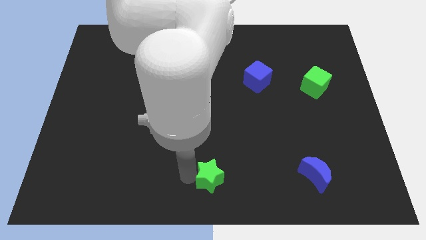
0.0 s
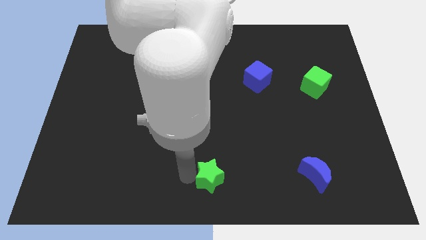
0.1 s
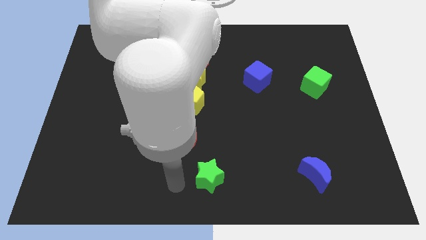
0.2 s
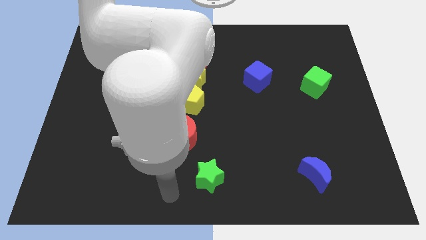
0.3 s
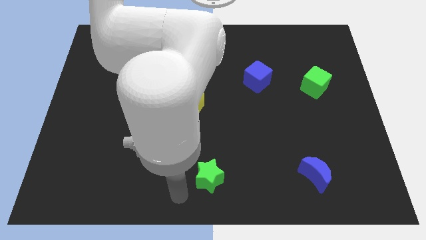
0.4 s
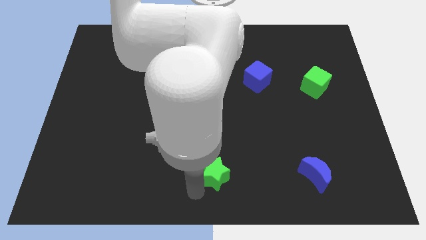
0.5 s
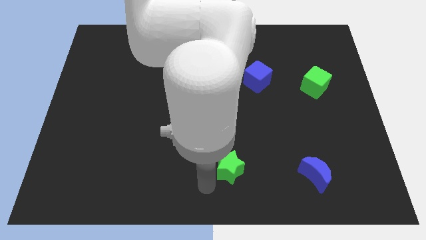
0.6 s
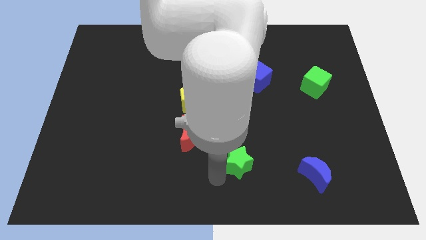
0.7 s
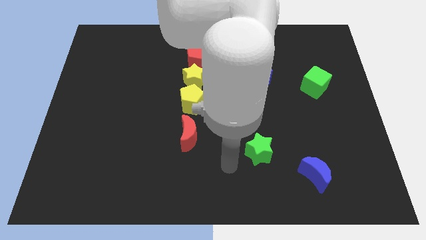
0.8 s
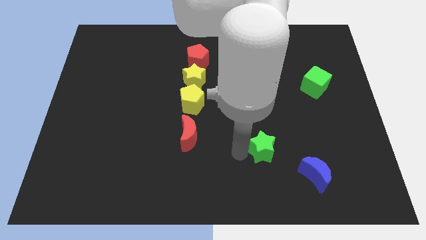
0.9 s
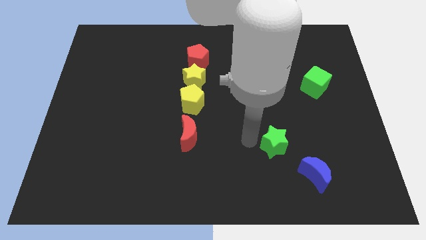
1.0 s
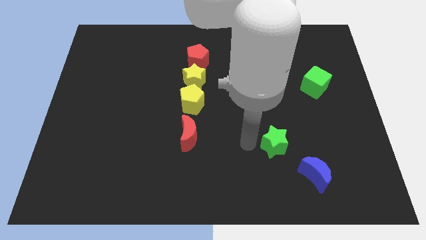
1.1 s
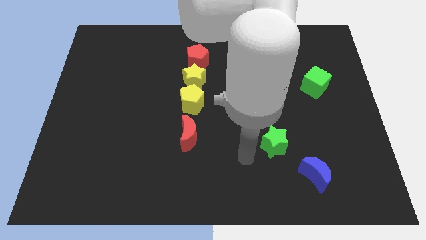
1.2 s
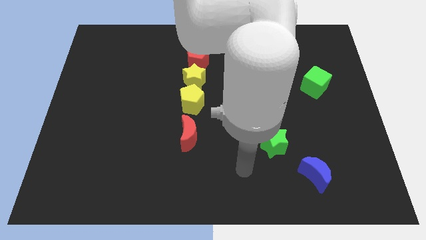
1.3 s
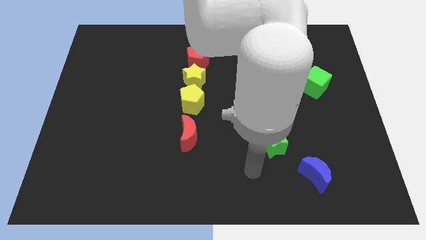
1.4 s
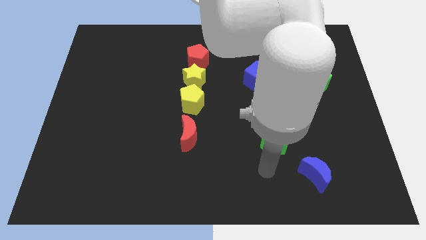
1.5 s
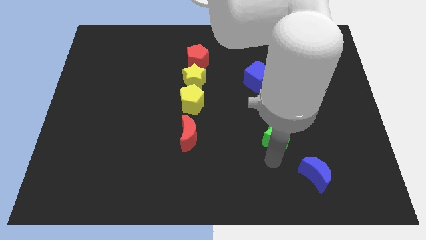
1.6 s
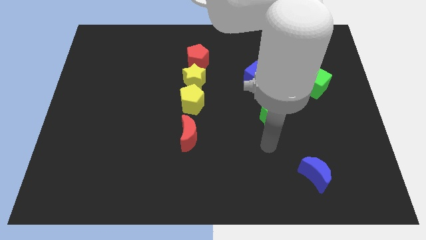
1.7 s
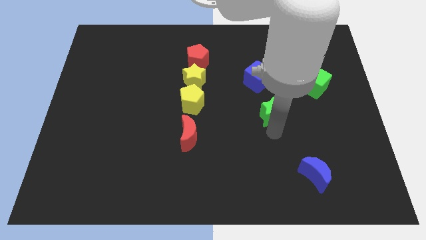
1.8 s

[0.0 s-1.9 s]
place the green star below the blue cube

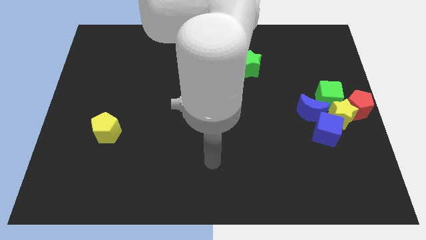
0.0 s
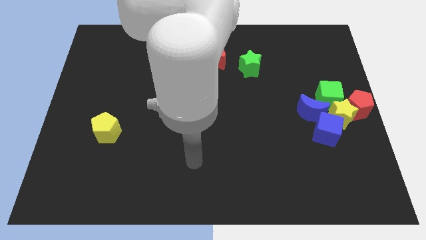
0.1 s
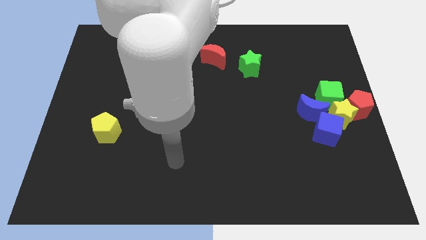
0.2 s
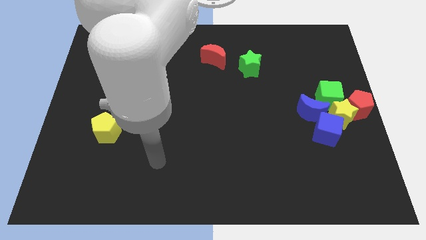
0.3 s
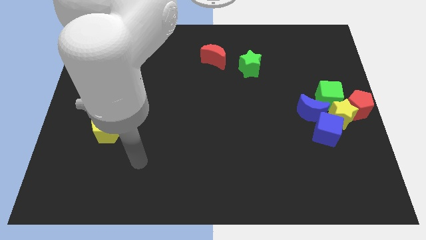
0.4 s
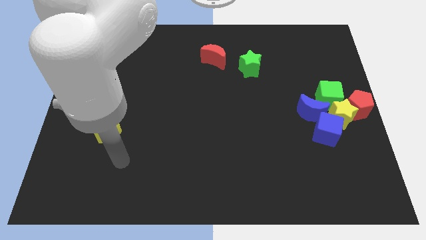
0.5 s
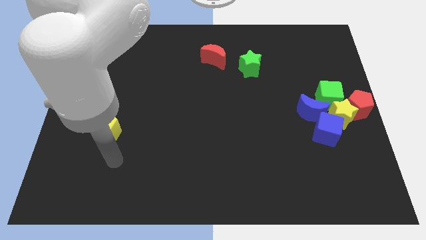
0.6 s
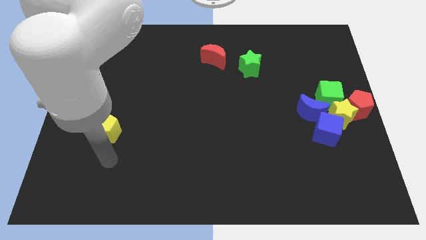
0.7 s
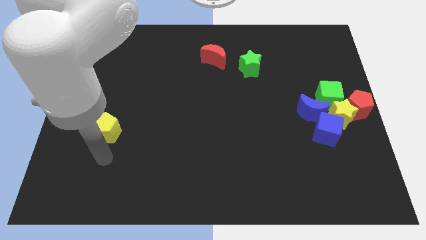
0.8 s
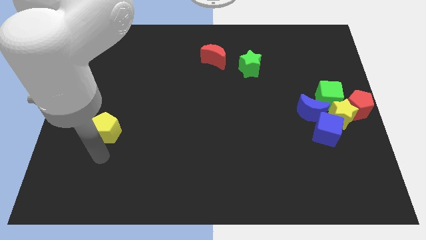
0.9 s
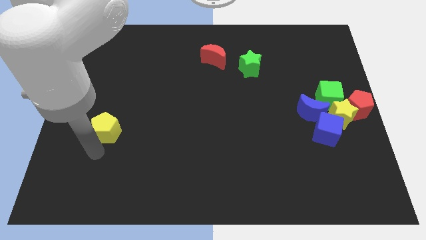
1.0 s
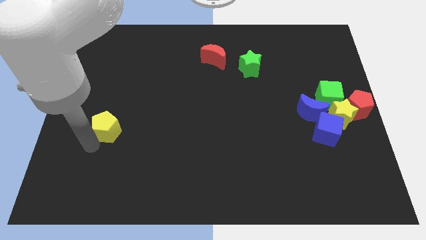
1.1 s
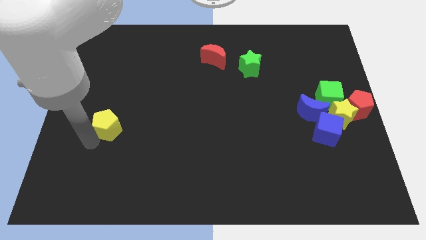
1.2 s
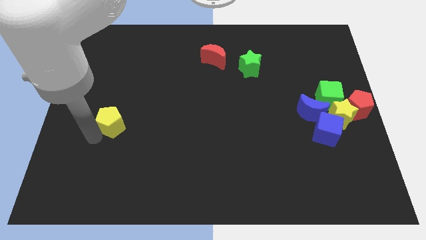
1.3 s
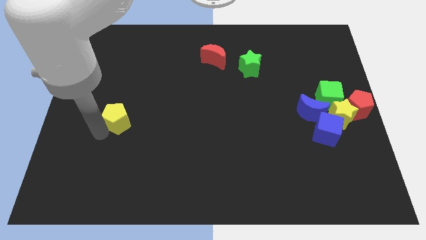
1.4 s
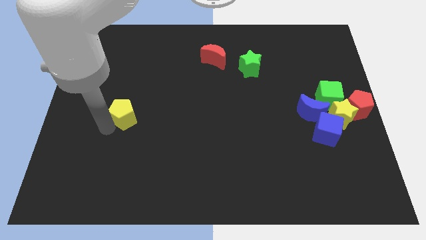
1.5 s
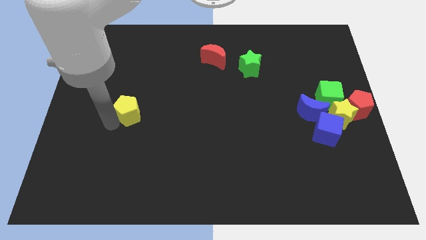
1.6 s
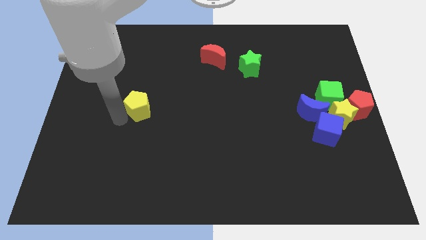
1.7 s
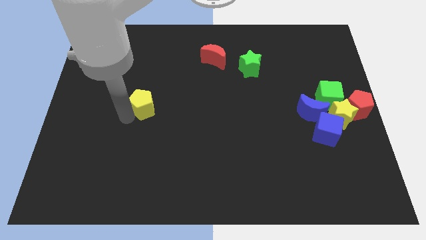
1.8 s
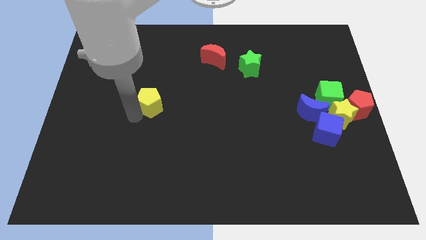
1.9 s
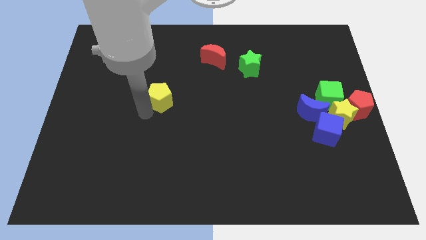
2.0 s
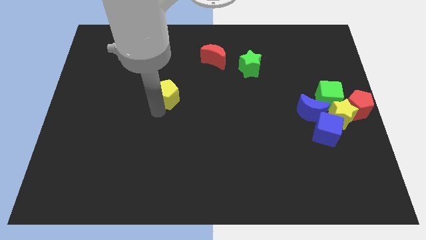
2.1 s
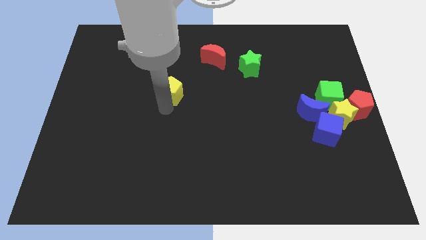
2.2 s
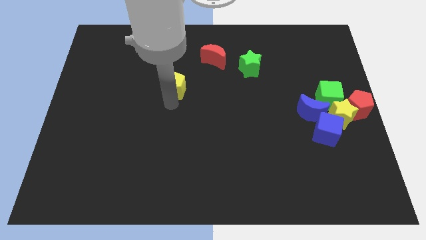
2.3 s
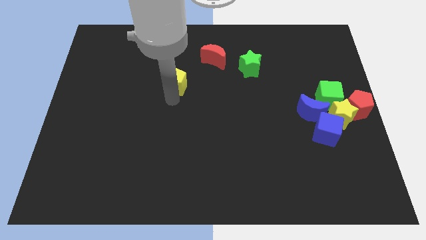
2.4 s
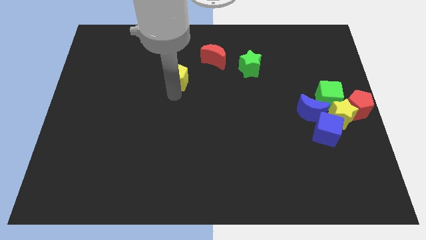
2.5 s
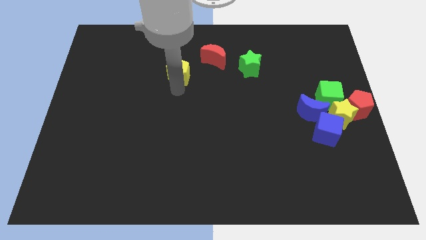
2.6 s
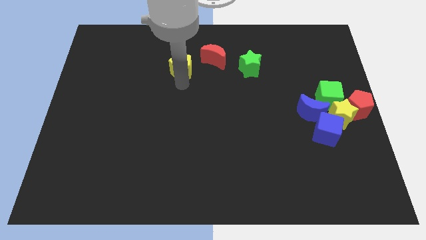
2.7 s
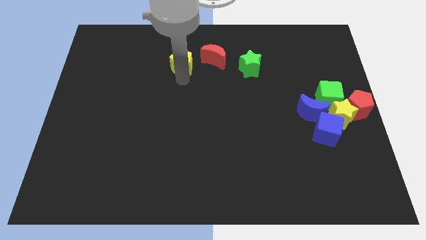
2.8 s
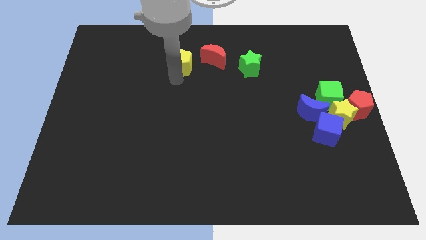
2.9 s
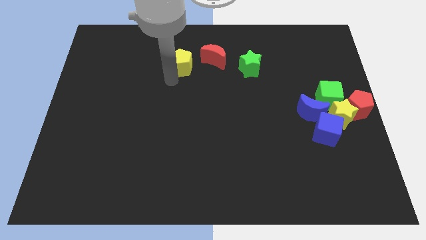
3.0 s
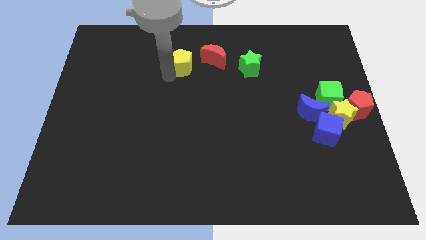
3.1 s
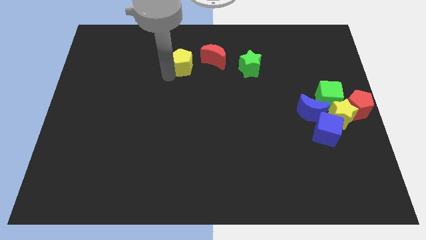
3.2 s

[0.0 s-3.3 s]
place the yellow pentagon to the left of red moon

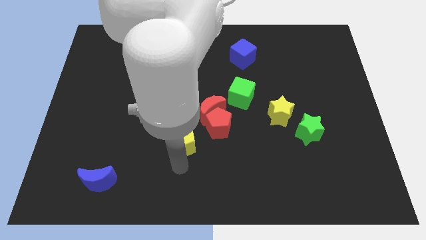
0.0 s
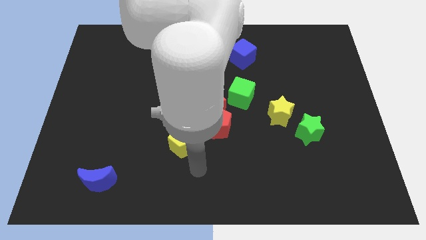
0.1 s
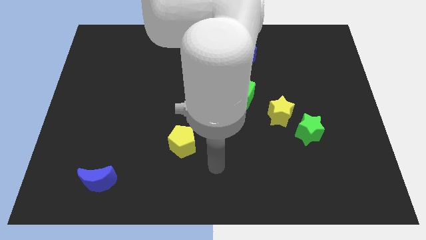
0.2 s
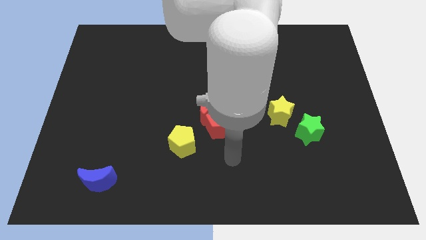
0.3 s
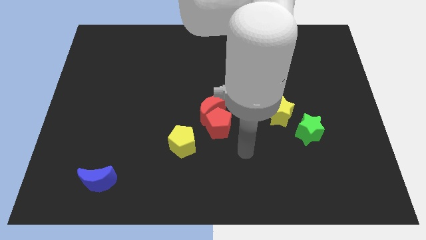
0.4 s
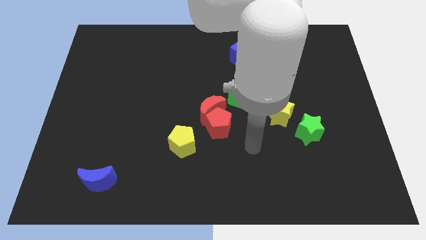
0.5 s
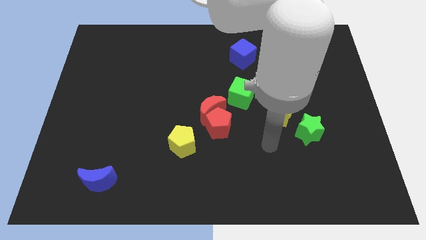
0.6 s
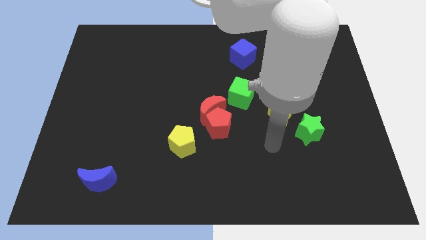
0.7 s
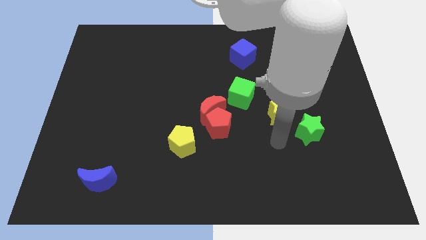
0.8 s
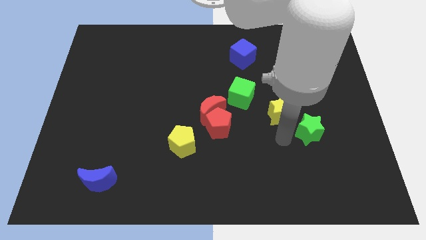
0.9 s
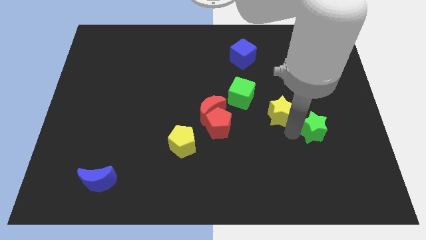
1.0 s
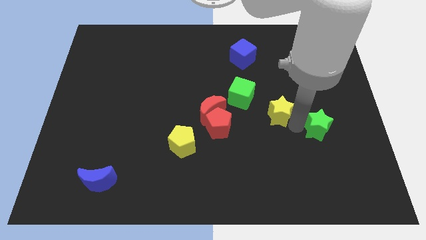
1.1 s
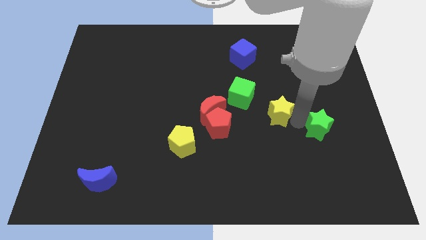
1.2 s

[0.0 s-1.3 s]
place the arm in between yellow star and green star

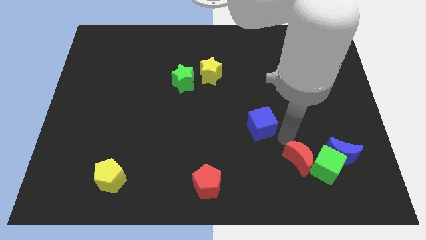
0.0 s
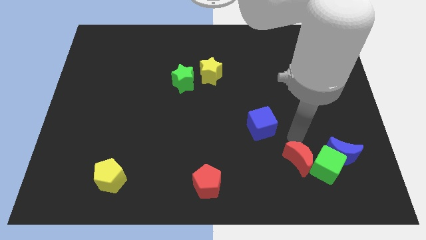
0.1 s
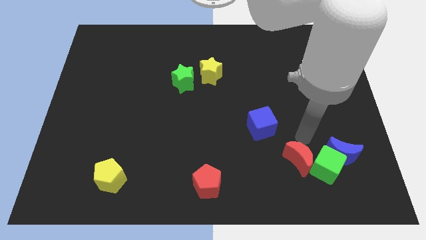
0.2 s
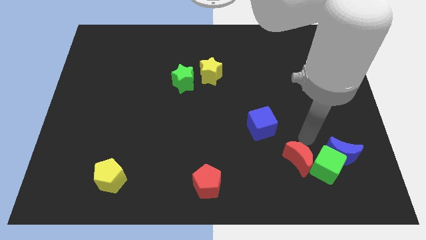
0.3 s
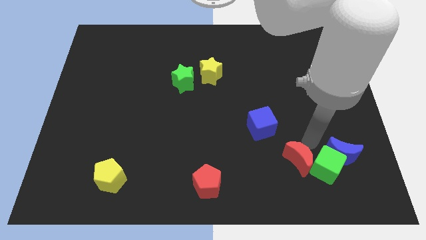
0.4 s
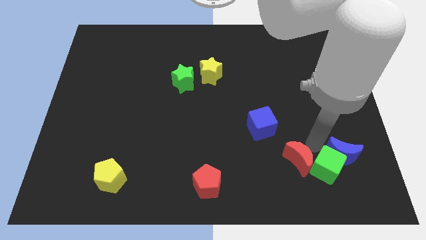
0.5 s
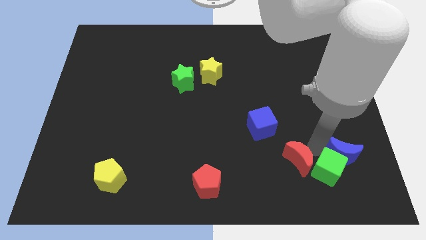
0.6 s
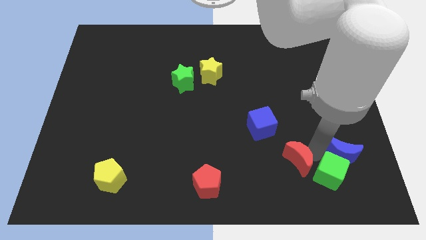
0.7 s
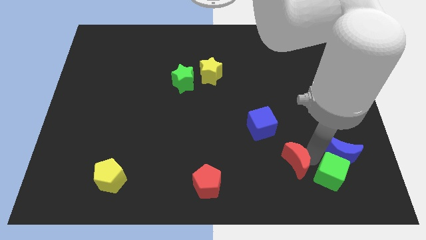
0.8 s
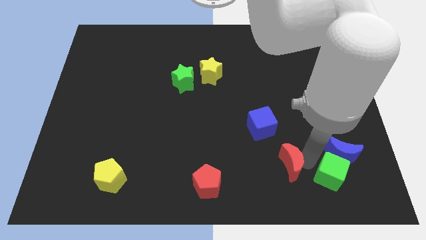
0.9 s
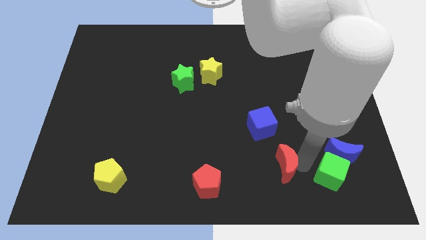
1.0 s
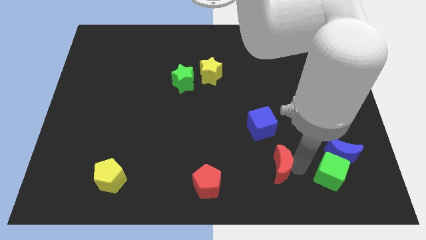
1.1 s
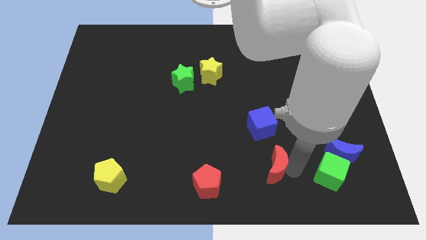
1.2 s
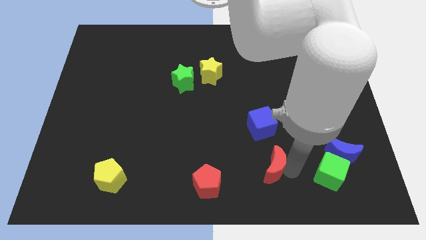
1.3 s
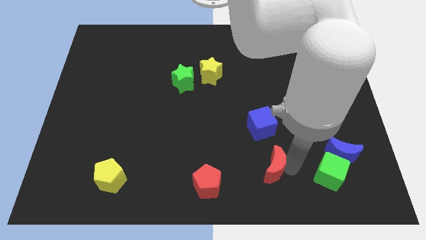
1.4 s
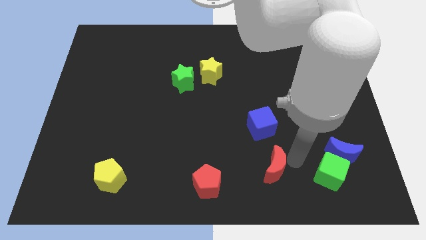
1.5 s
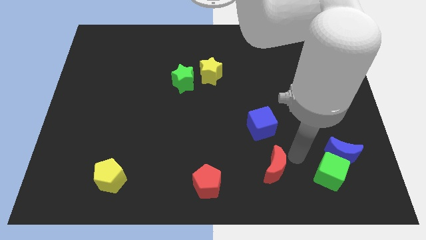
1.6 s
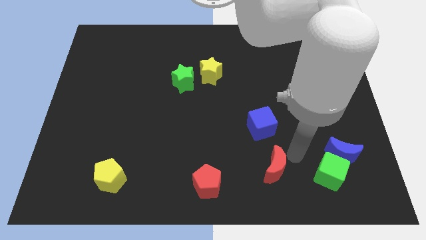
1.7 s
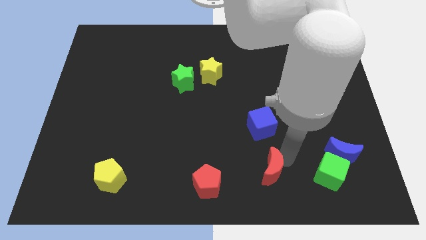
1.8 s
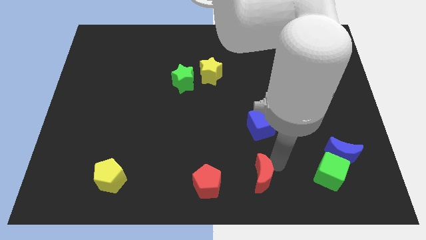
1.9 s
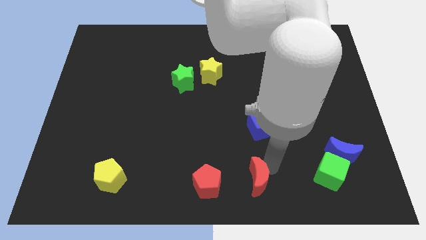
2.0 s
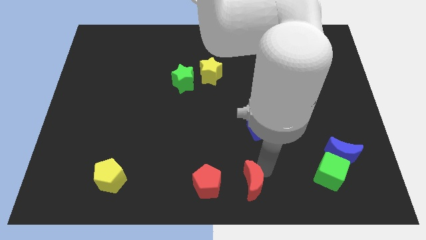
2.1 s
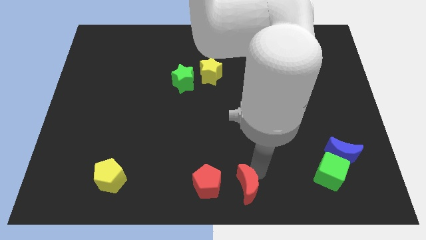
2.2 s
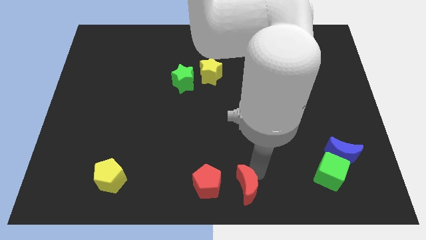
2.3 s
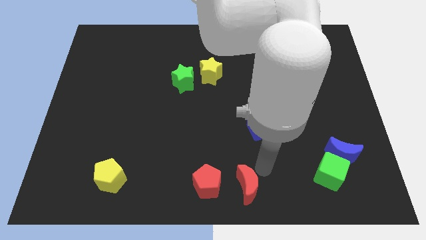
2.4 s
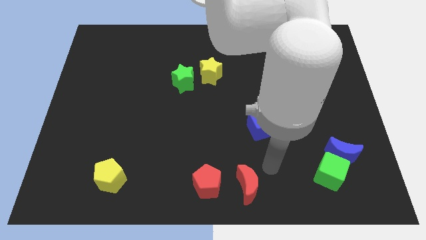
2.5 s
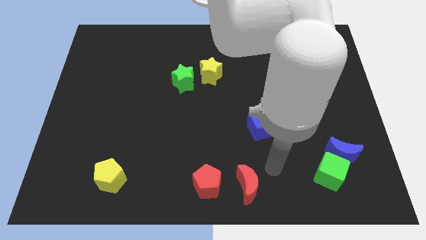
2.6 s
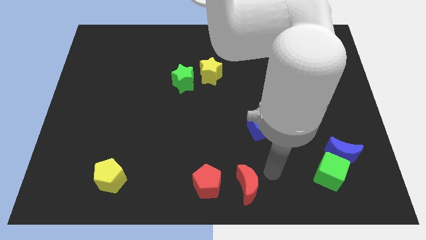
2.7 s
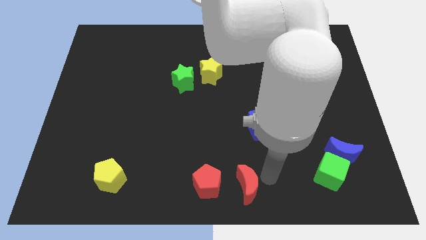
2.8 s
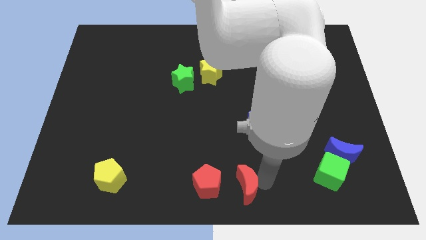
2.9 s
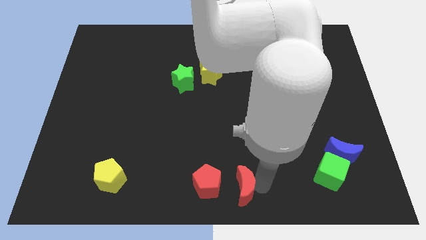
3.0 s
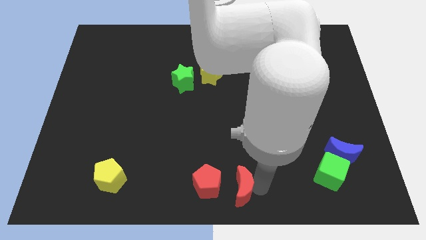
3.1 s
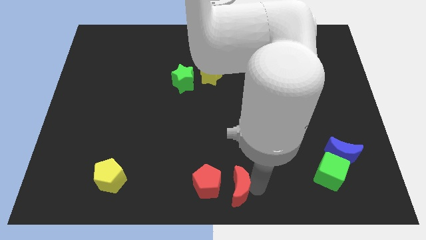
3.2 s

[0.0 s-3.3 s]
push the red crescent towards the red pentagon
